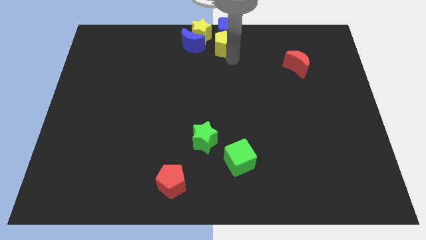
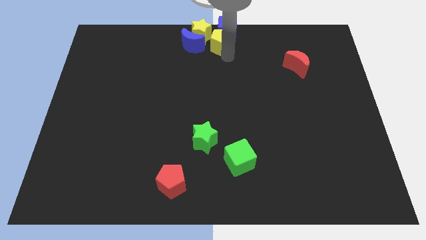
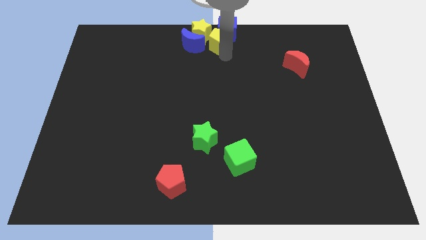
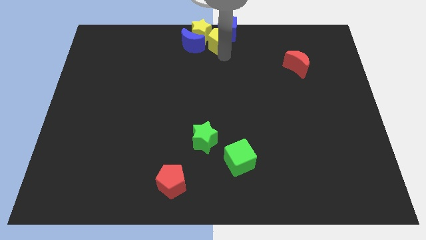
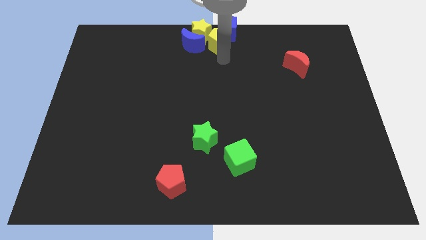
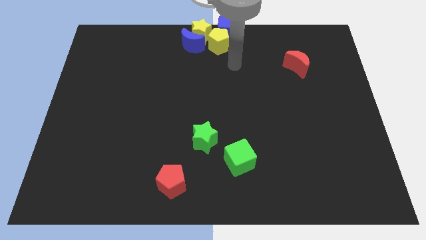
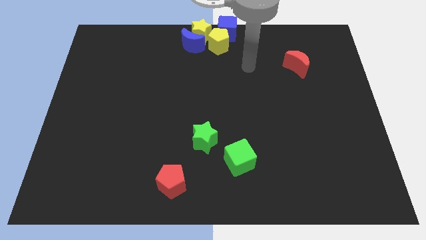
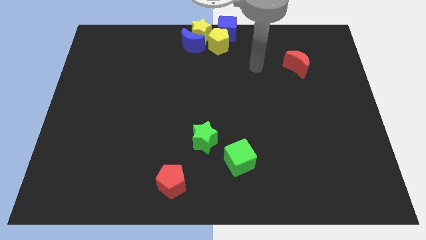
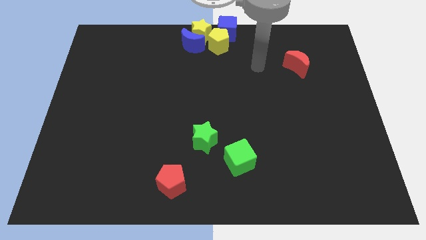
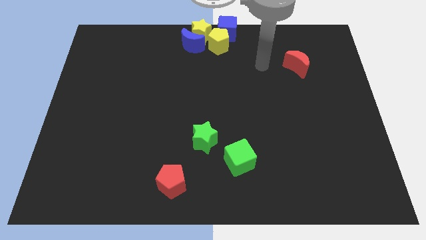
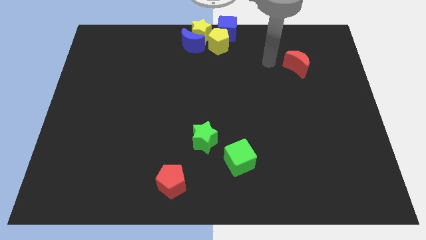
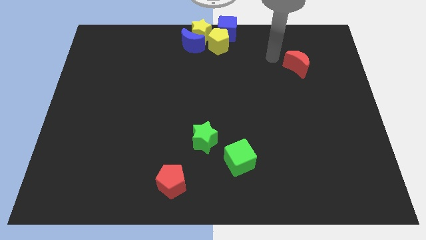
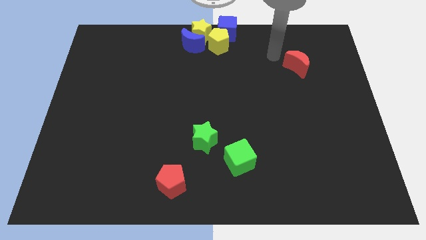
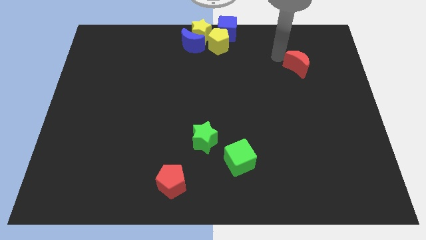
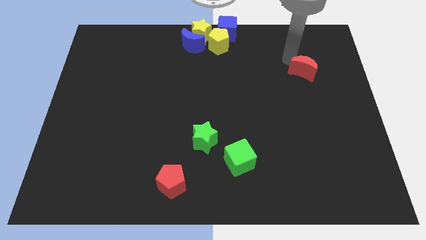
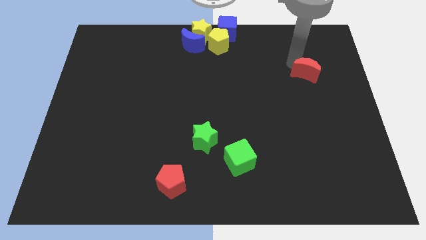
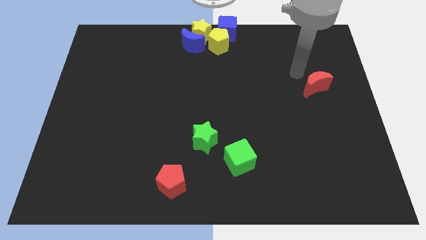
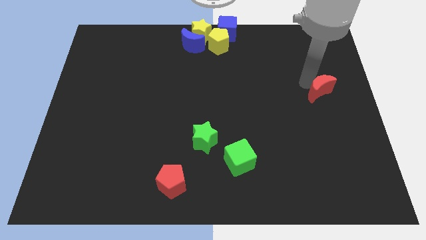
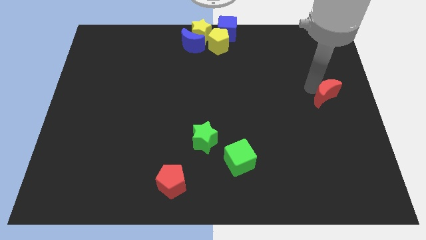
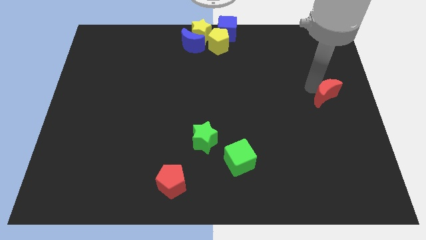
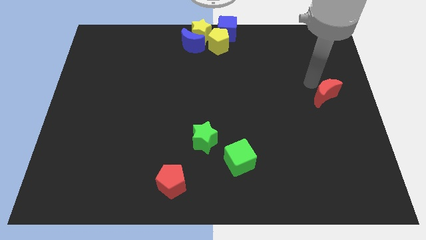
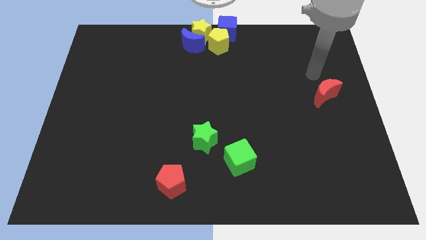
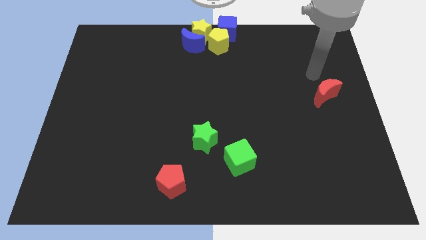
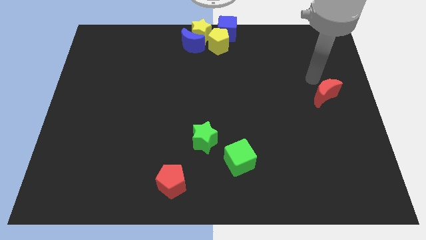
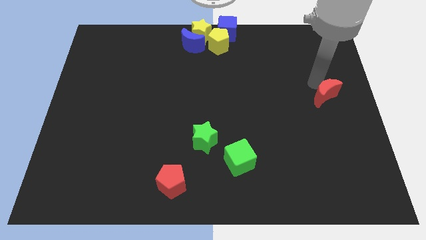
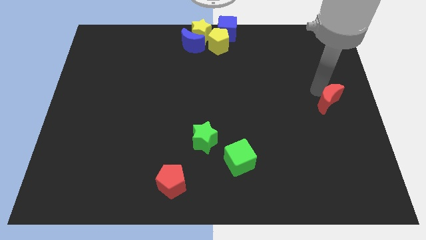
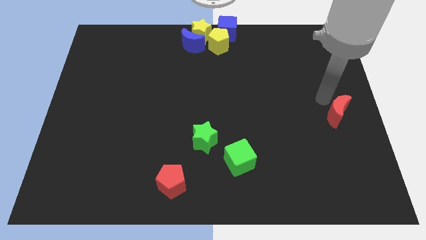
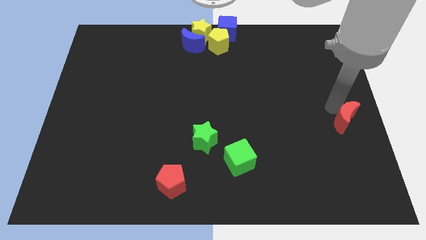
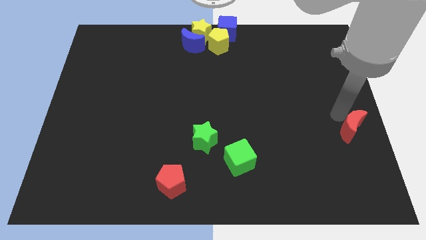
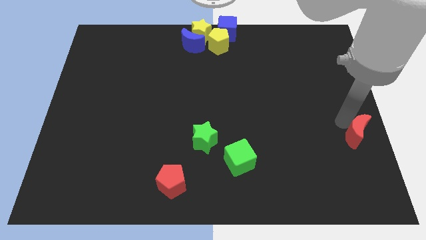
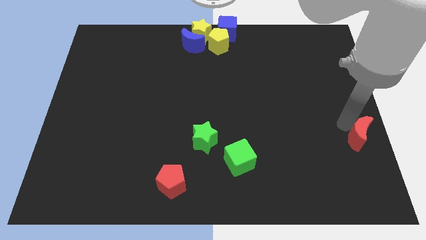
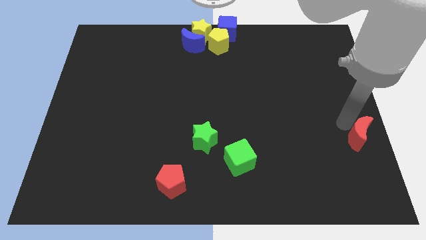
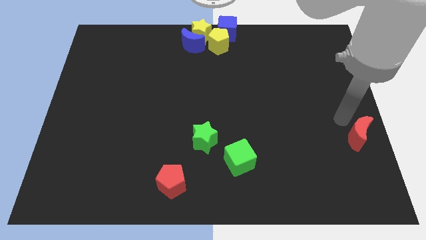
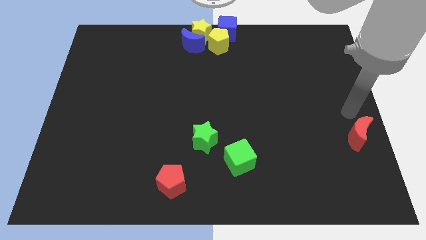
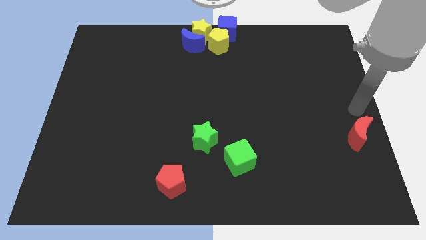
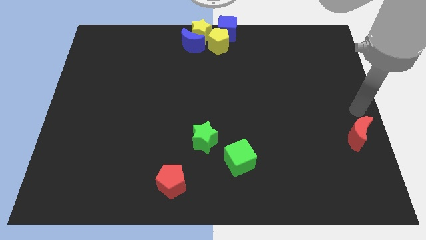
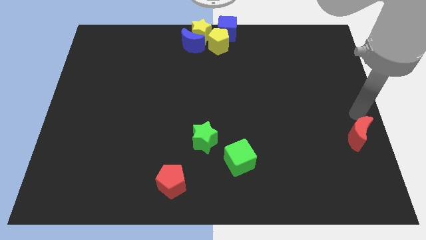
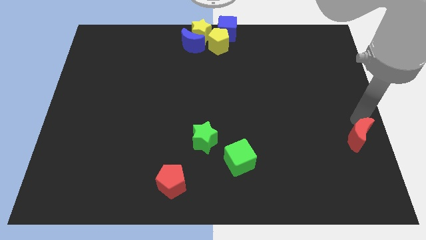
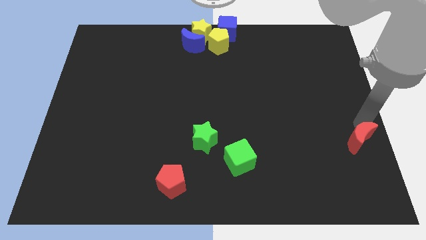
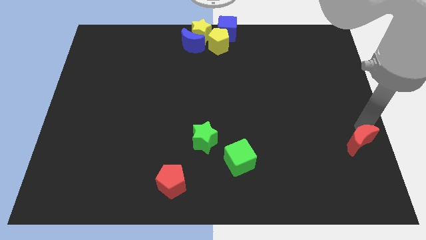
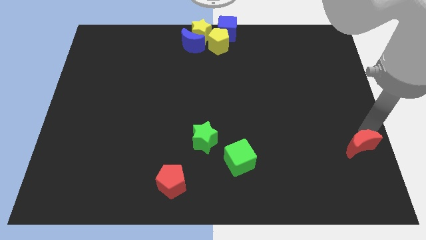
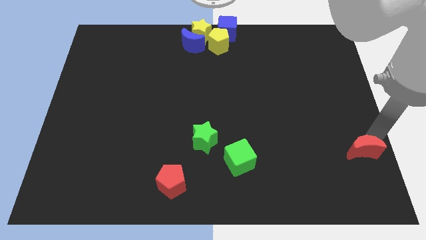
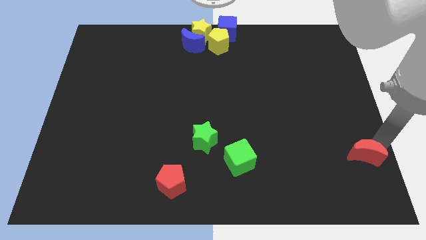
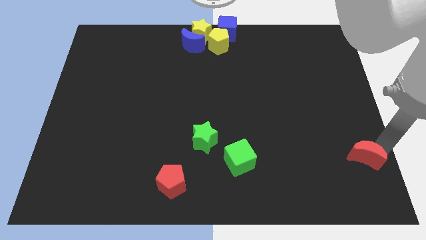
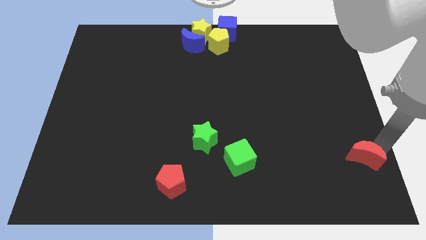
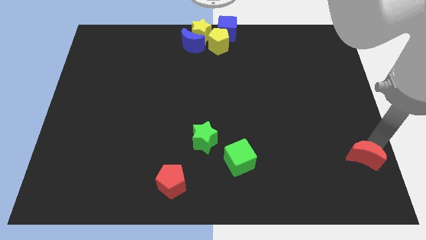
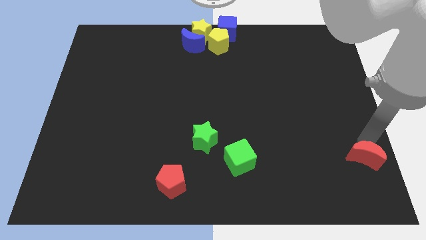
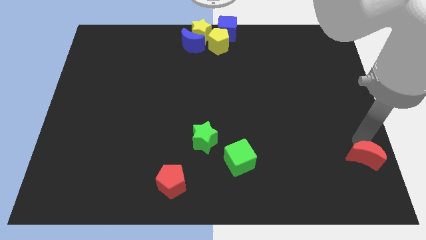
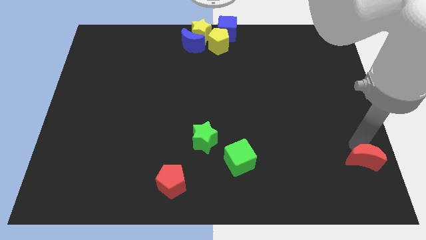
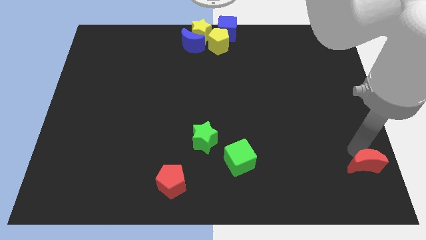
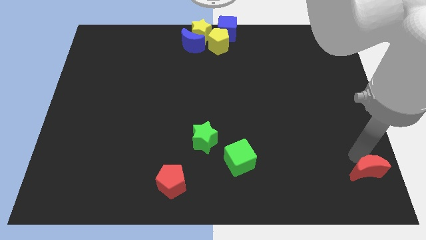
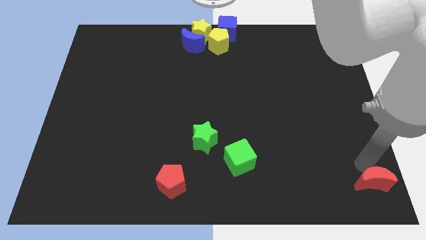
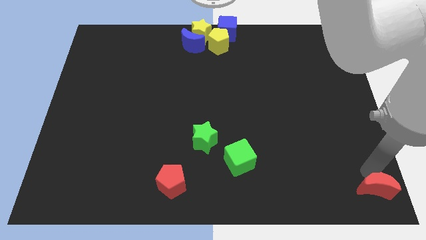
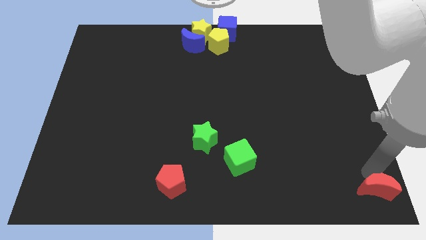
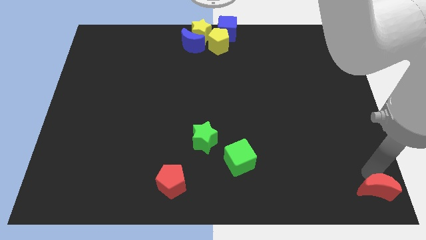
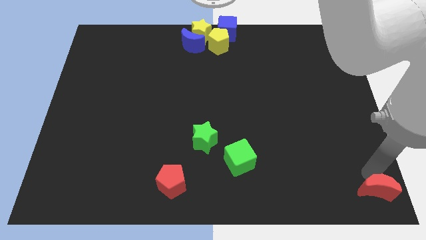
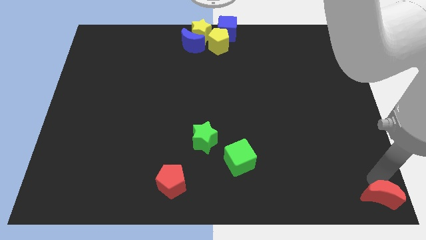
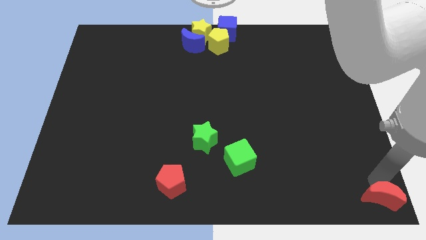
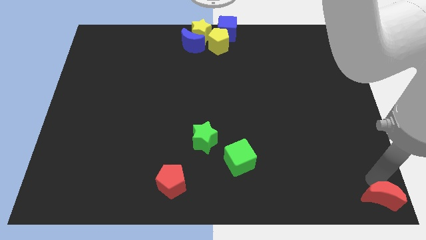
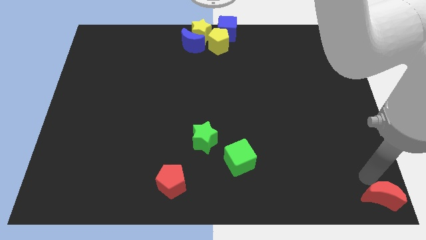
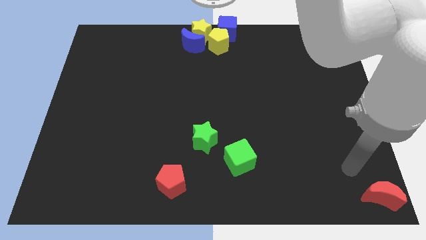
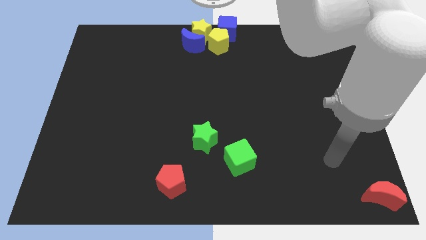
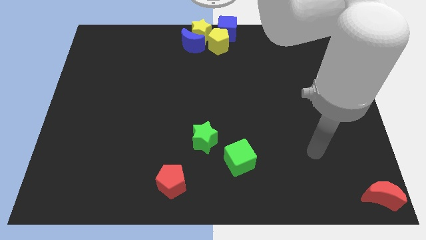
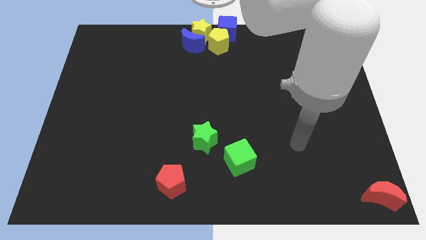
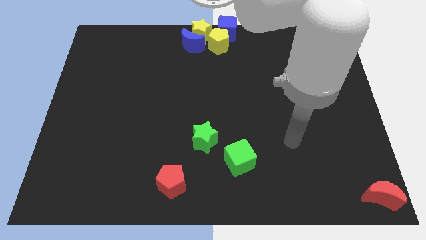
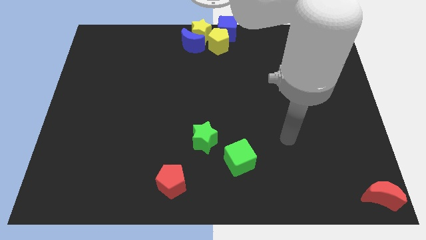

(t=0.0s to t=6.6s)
move the red crescent to the bottom right corner

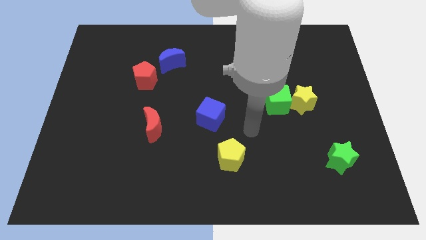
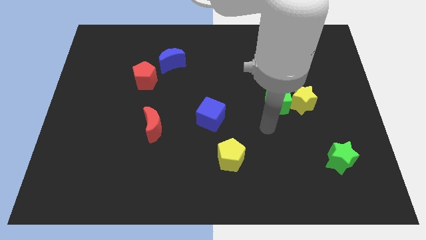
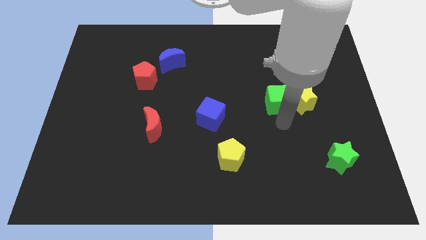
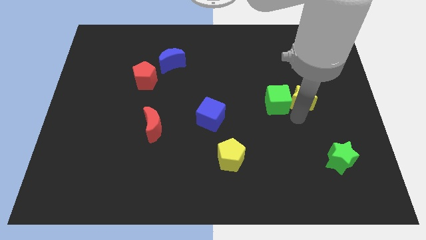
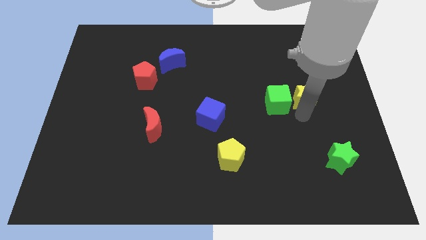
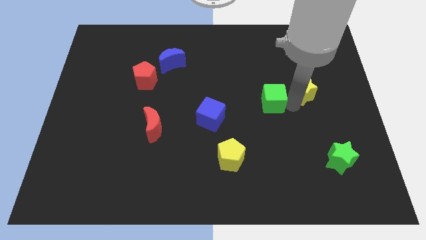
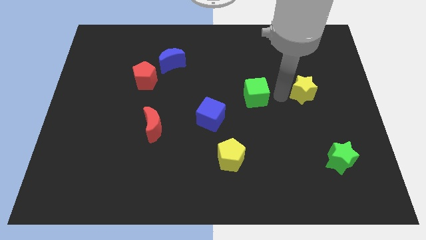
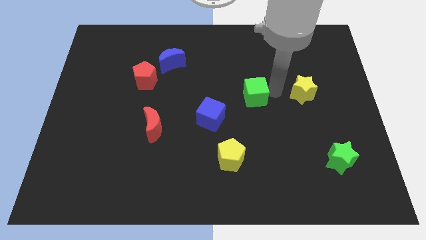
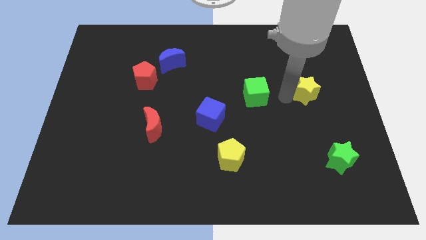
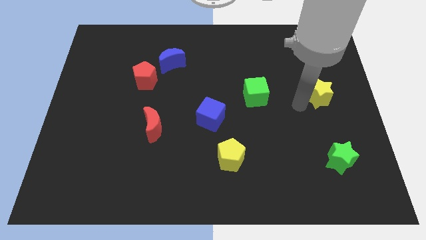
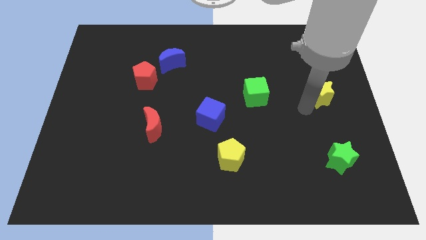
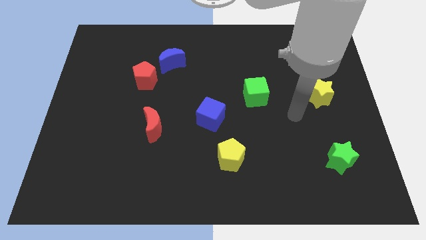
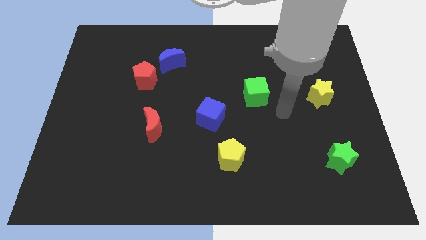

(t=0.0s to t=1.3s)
separate the green cube and yellow star from each other

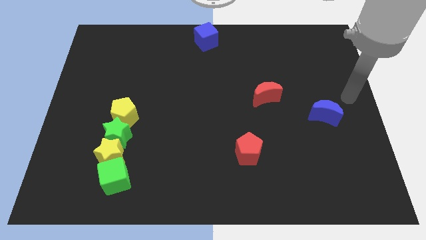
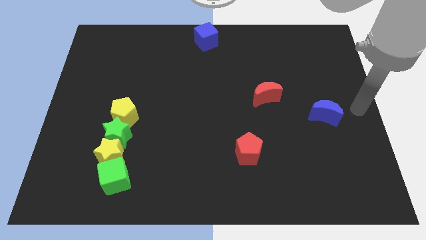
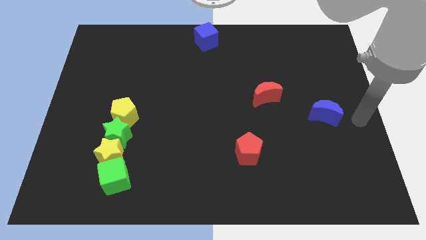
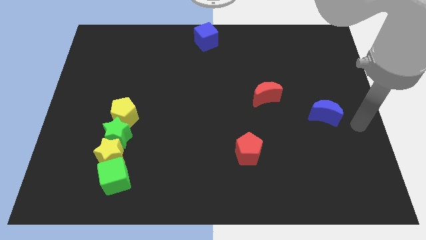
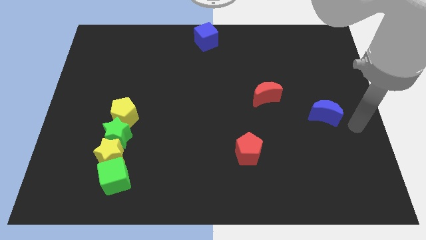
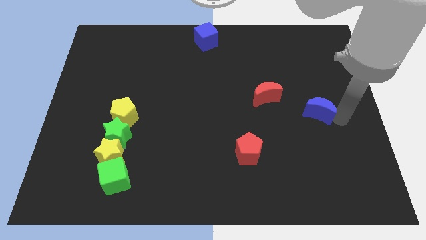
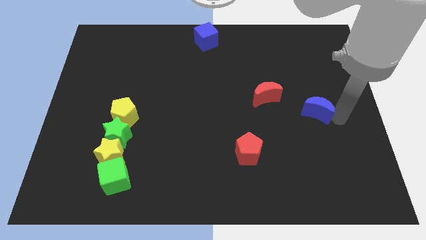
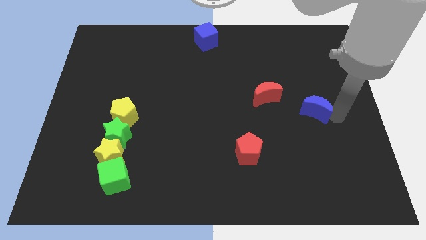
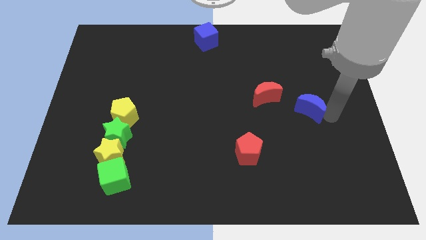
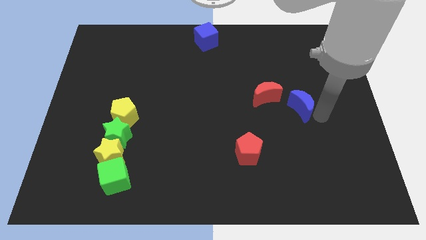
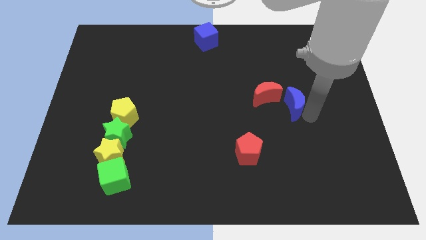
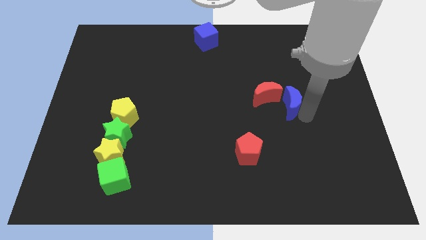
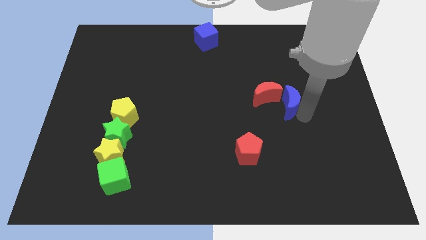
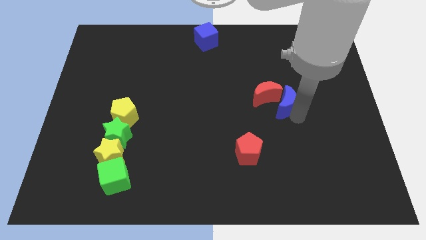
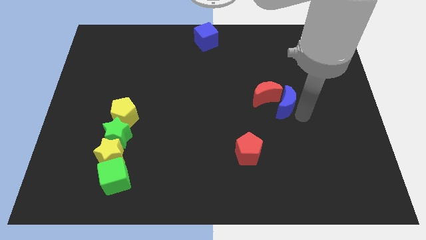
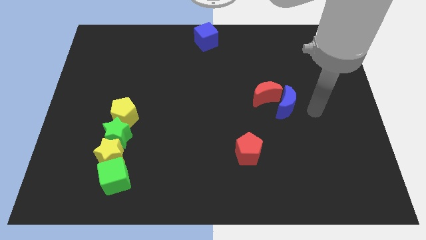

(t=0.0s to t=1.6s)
push the blue crescent into the red crescent
